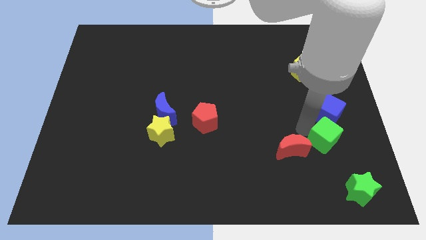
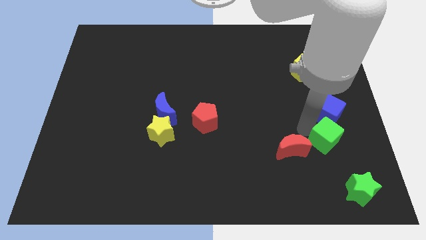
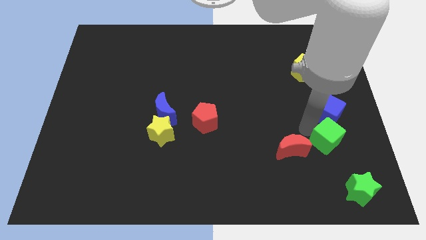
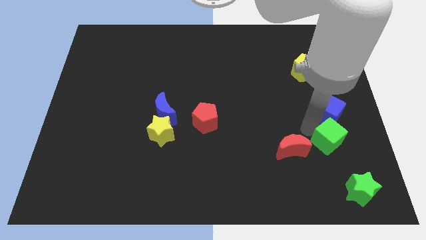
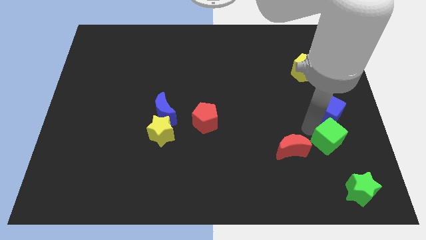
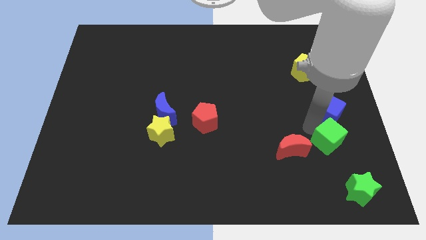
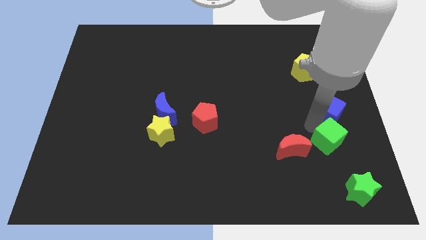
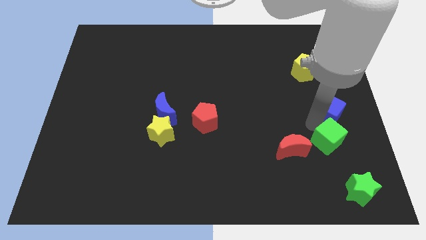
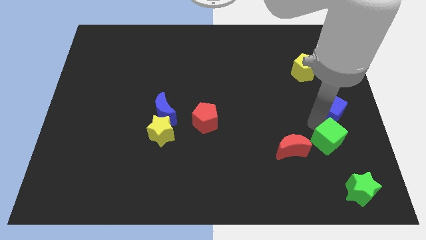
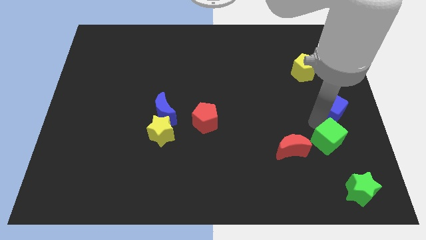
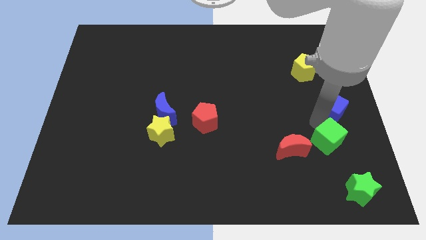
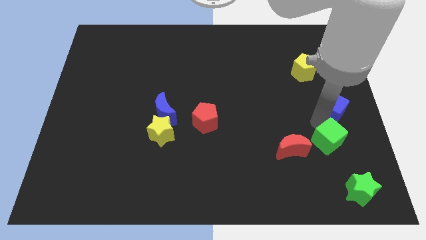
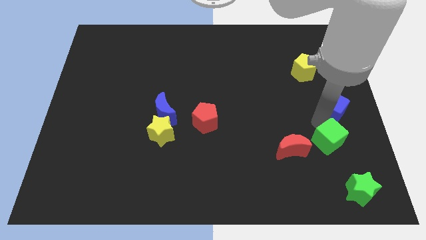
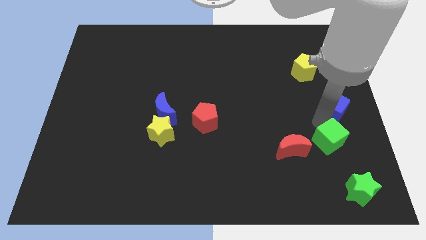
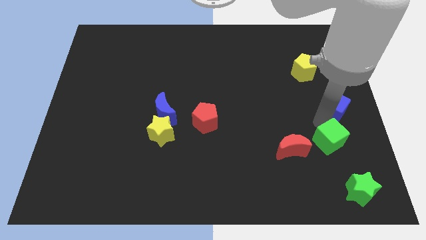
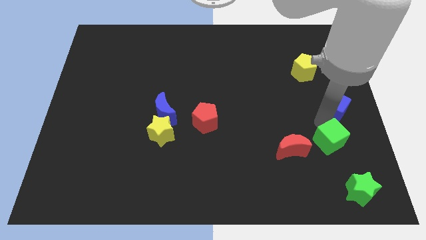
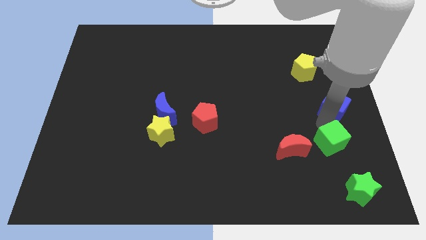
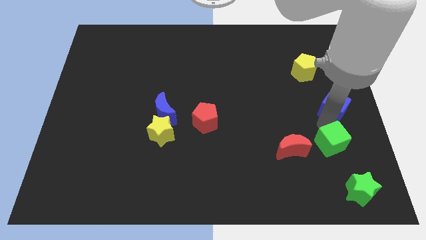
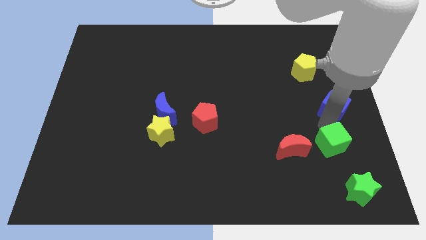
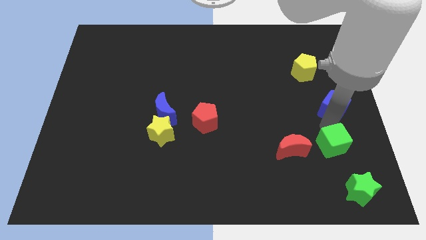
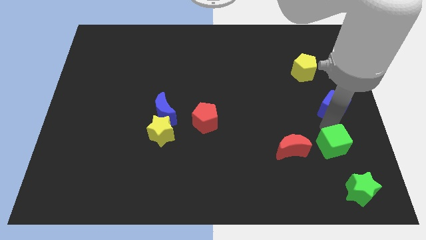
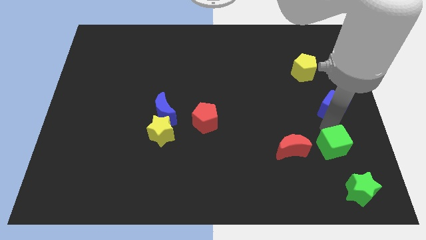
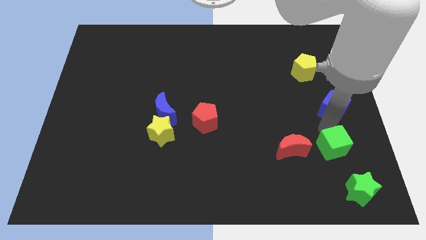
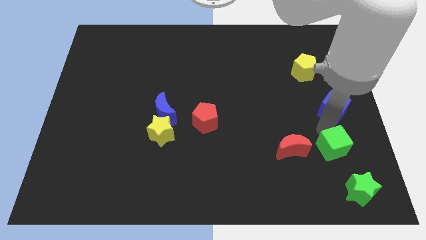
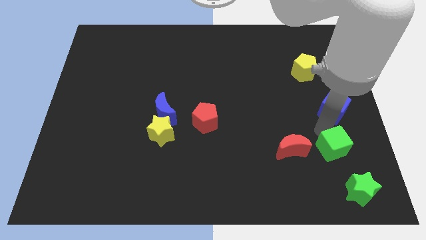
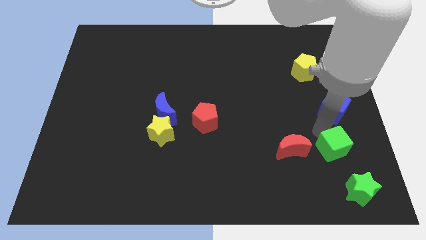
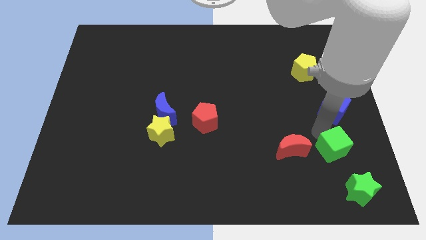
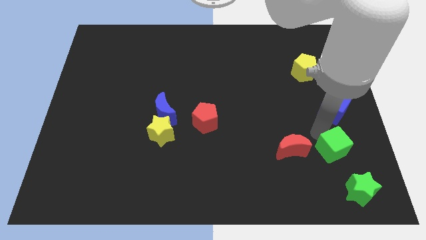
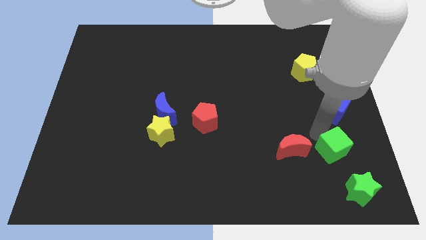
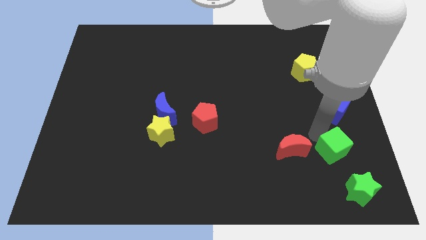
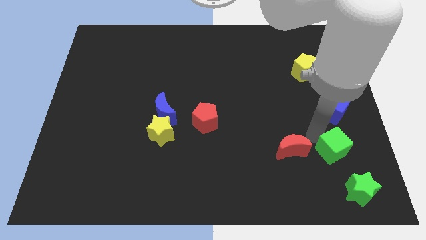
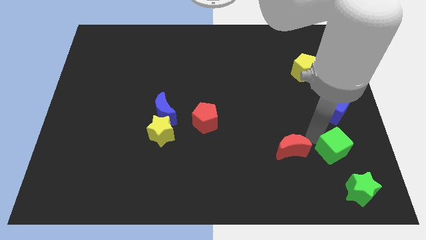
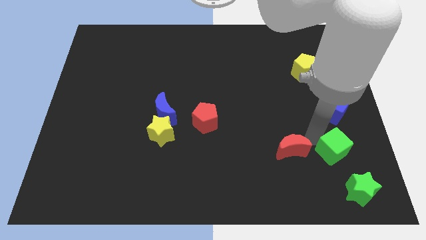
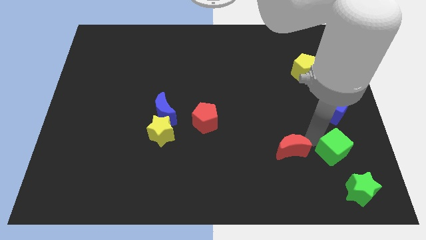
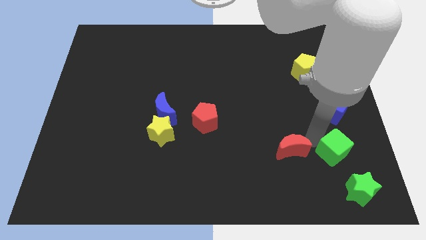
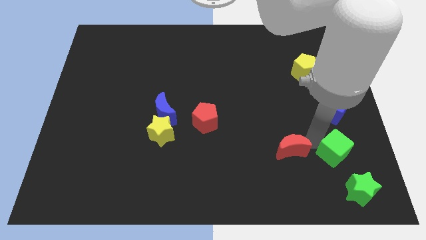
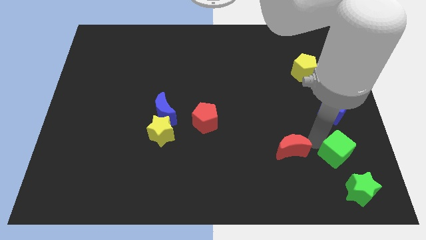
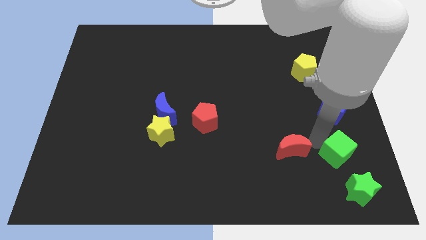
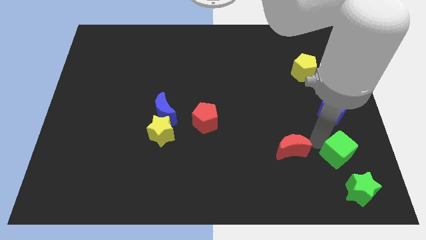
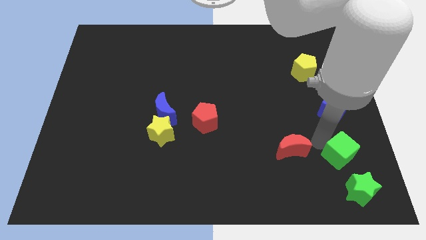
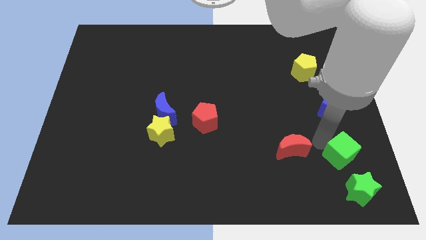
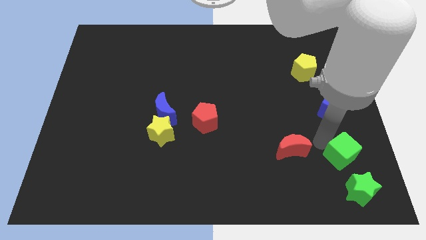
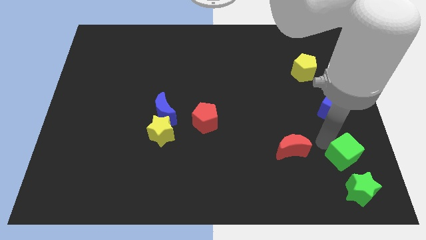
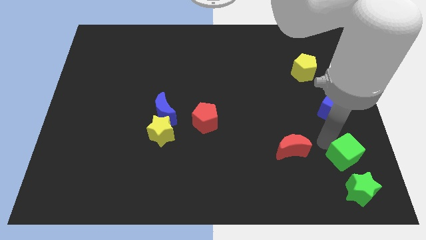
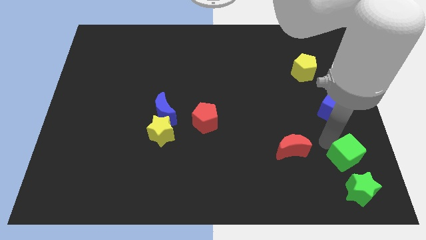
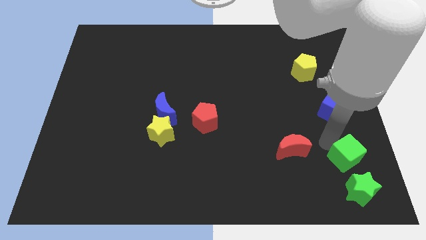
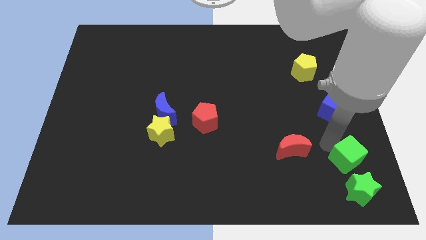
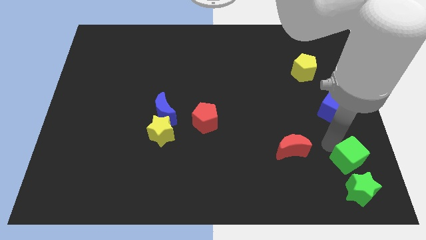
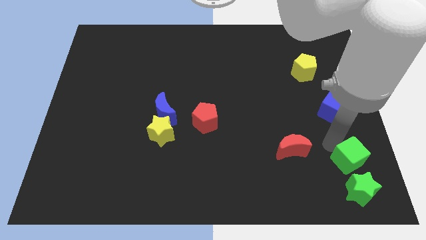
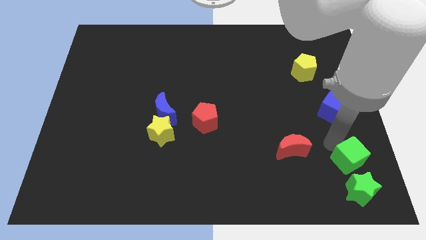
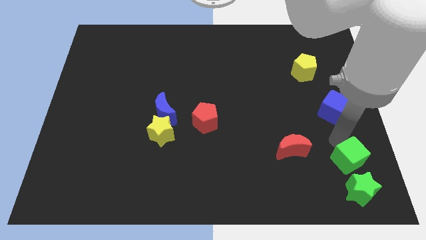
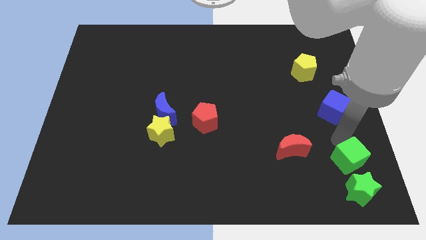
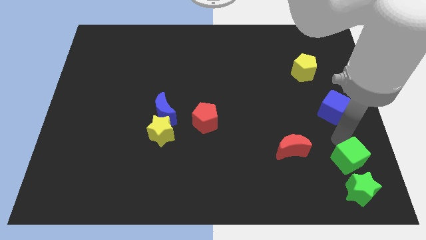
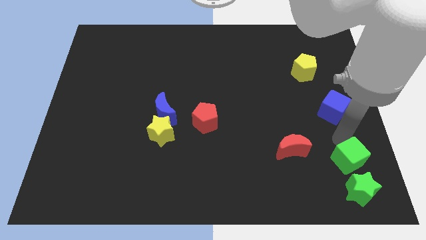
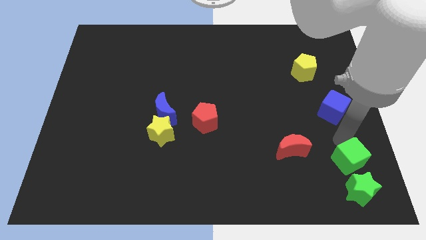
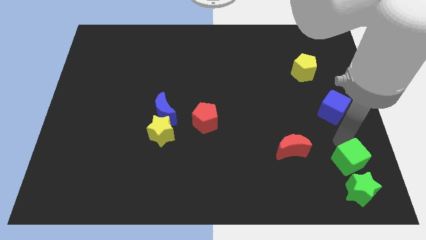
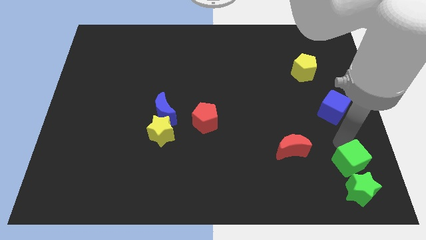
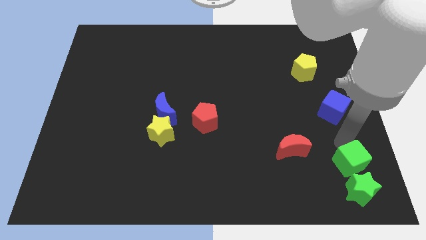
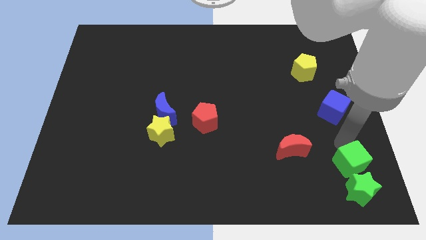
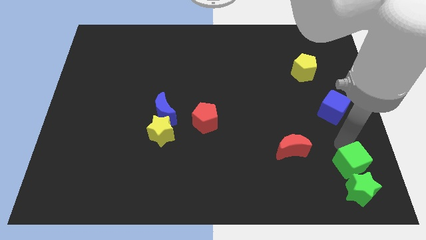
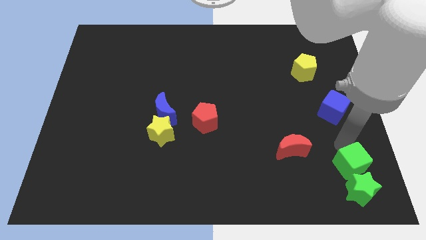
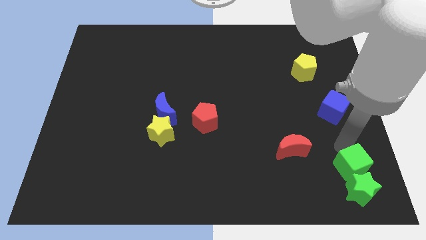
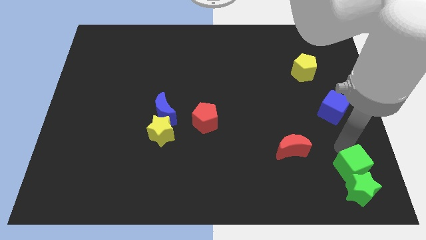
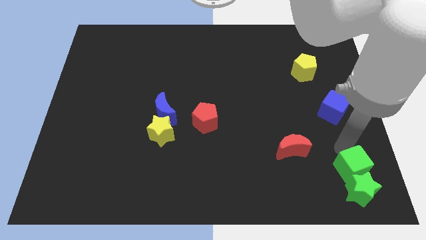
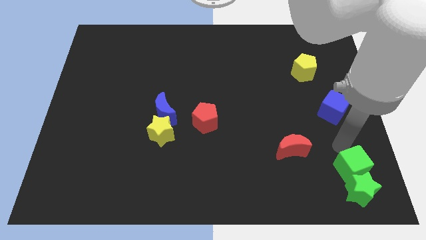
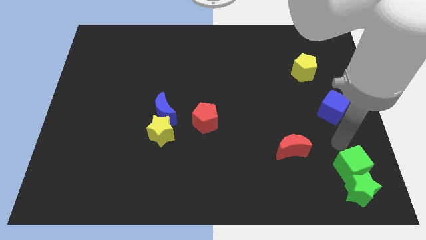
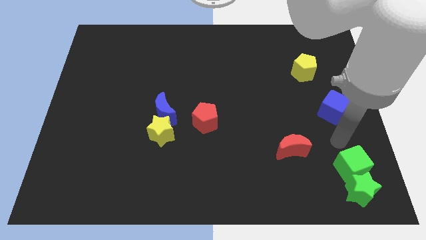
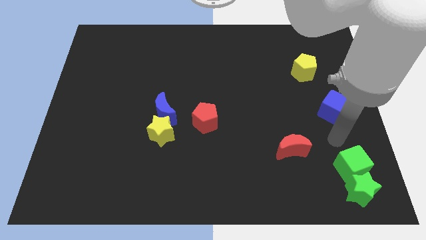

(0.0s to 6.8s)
push the green cube into the green star

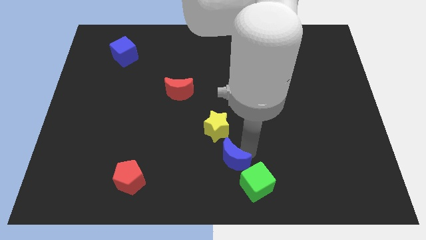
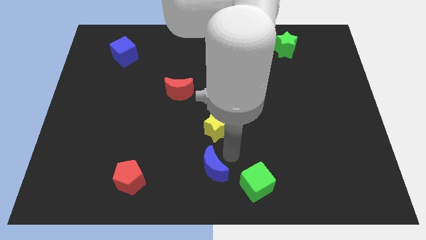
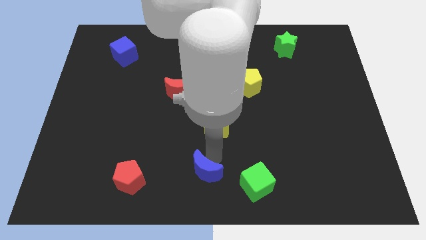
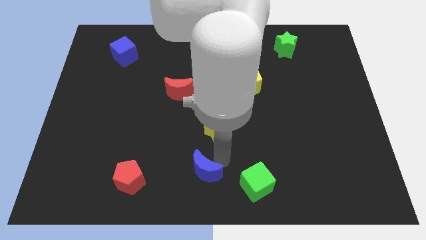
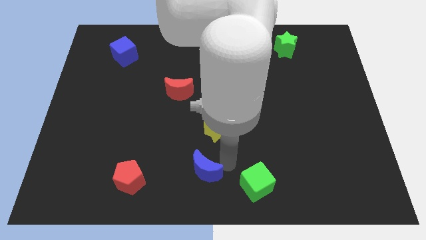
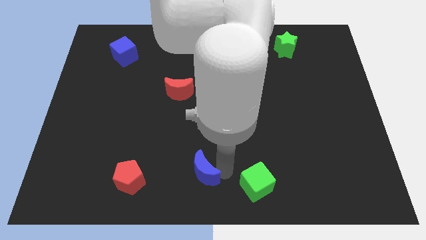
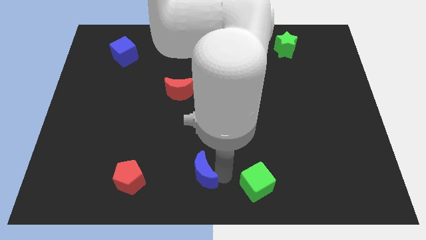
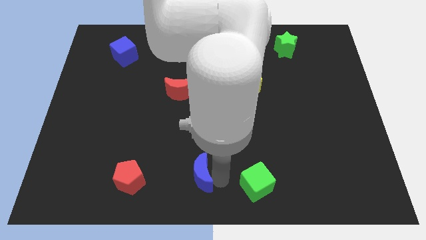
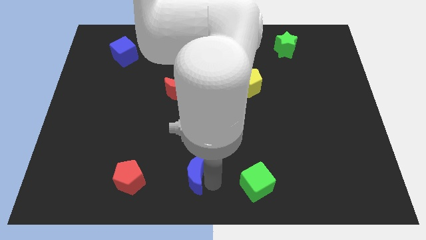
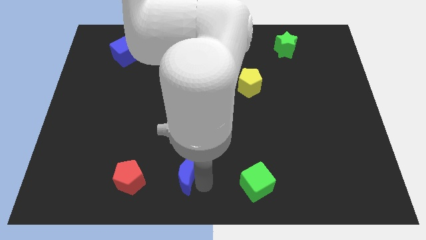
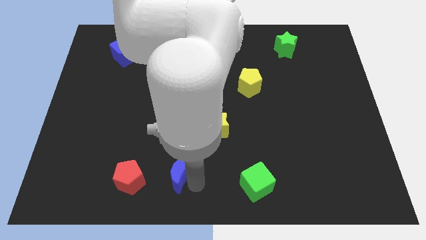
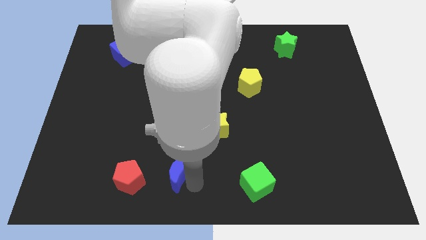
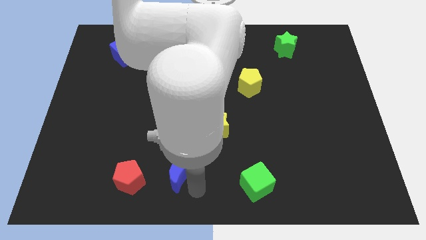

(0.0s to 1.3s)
put the blue moon diagonally bottom left to the yellow star

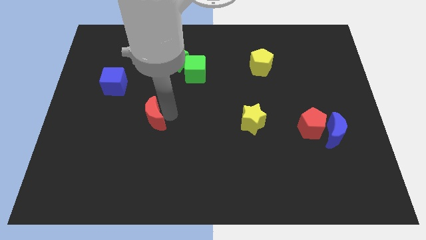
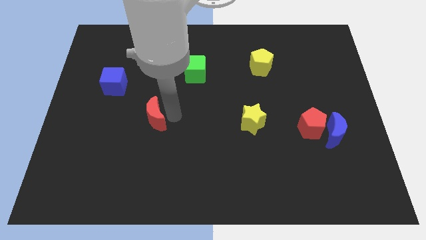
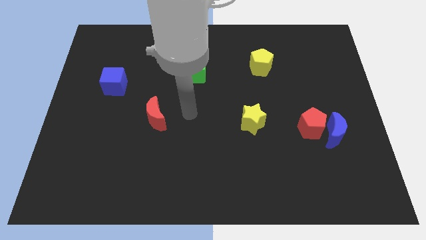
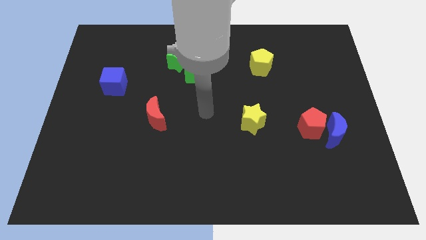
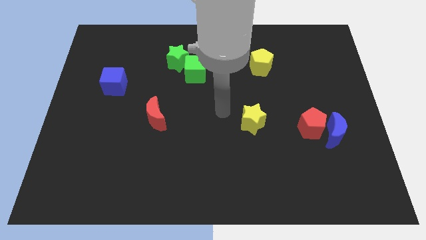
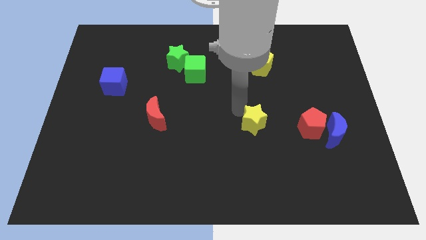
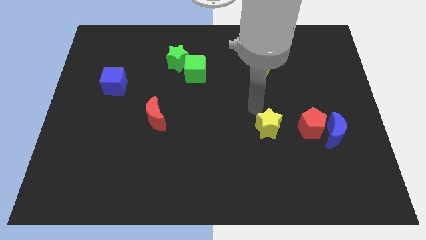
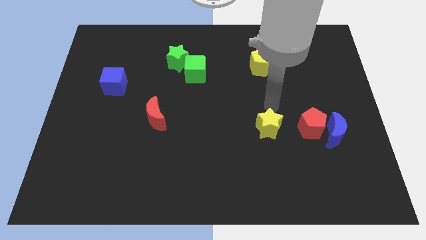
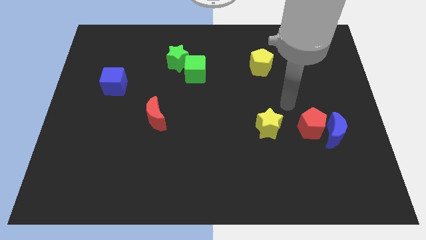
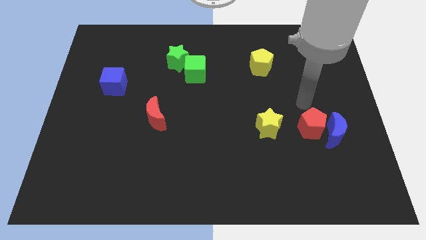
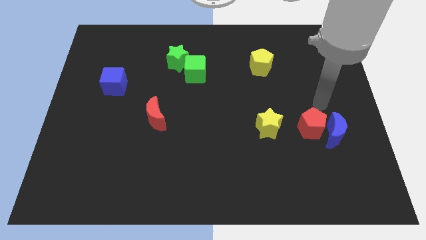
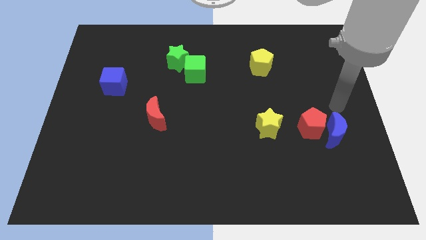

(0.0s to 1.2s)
move your hand towards the red pentagon
